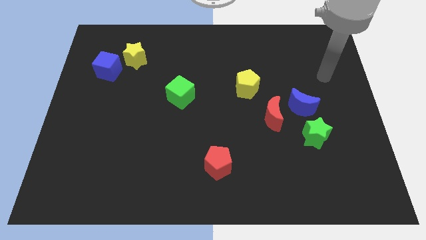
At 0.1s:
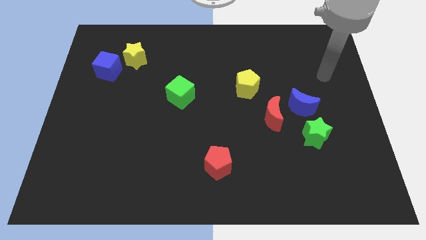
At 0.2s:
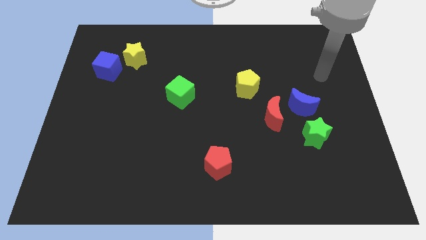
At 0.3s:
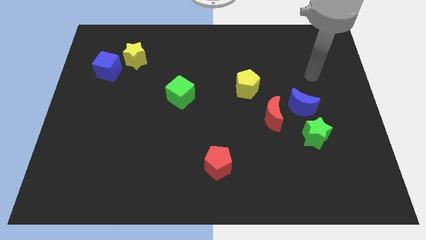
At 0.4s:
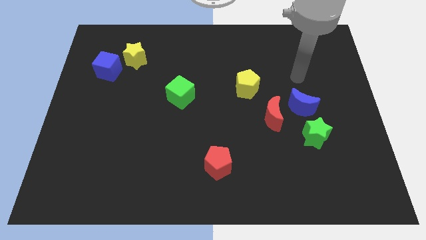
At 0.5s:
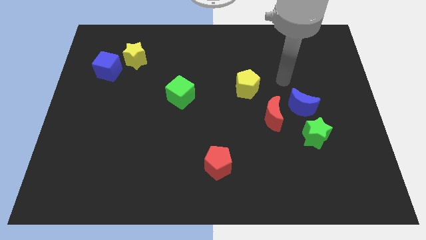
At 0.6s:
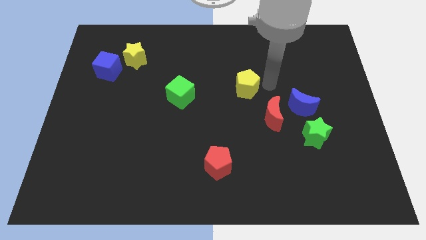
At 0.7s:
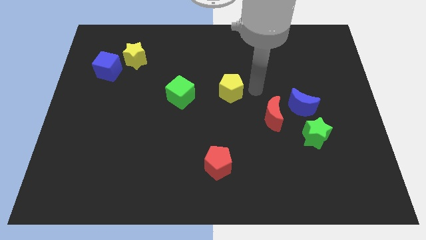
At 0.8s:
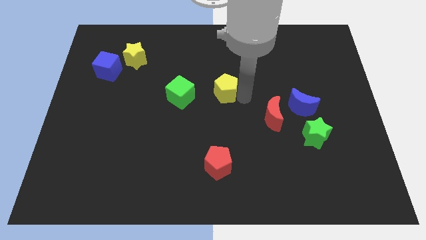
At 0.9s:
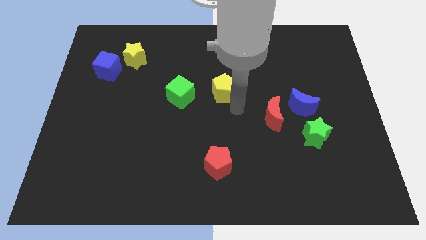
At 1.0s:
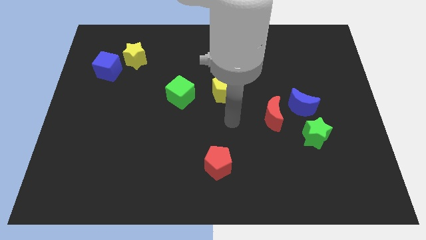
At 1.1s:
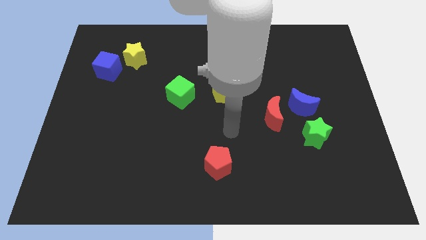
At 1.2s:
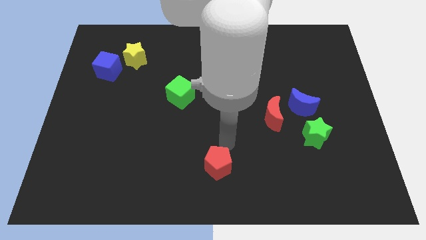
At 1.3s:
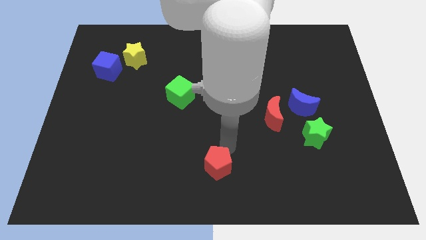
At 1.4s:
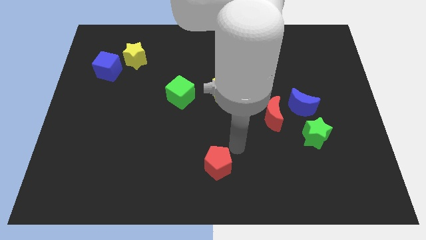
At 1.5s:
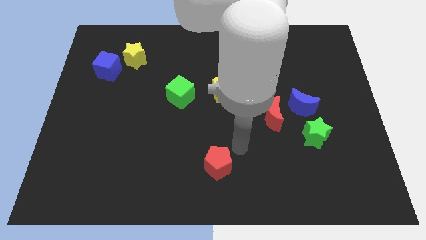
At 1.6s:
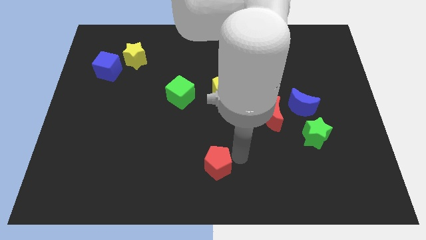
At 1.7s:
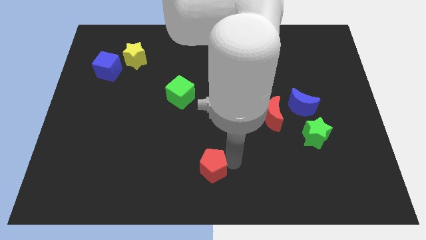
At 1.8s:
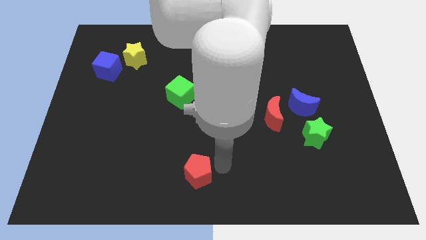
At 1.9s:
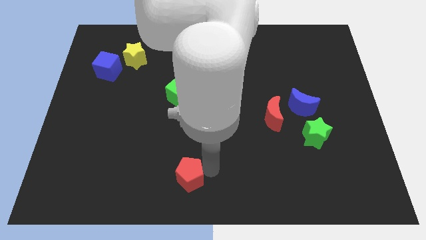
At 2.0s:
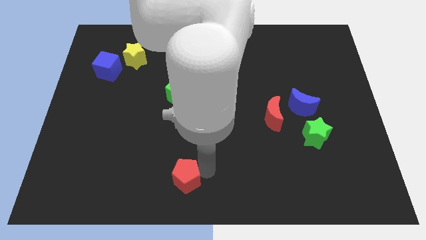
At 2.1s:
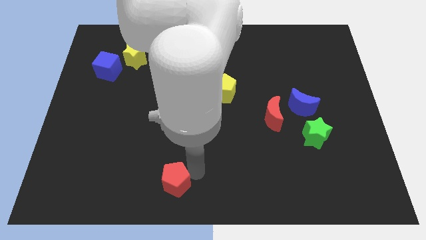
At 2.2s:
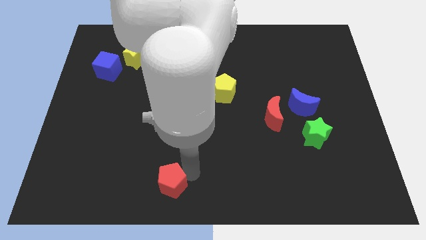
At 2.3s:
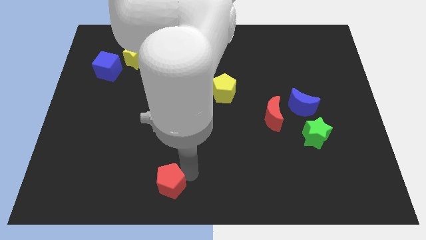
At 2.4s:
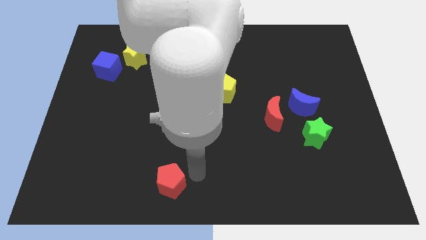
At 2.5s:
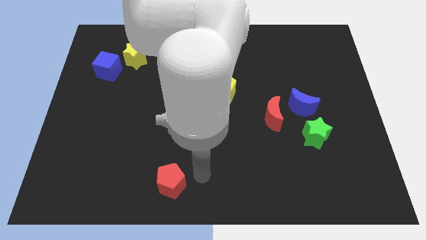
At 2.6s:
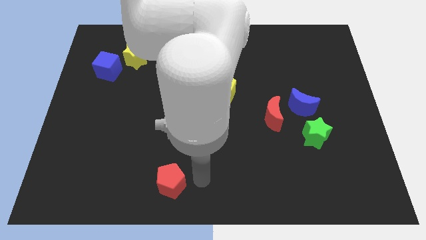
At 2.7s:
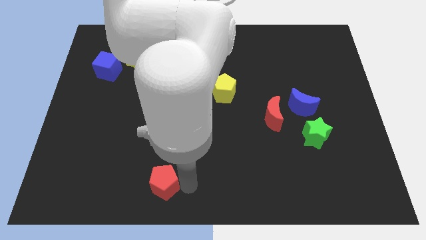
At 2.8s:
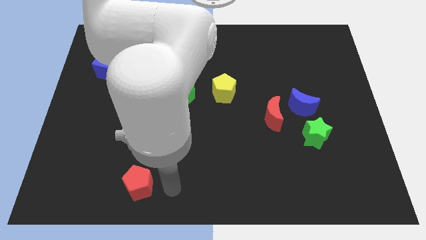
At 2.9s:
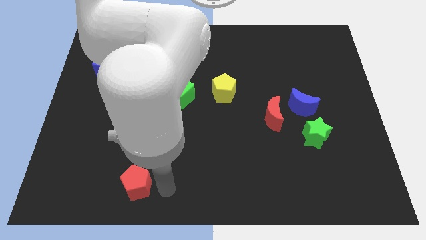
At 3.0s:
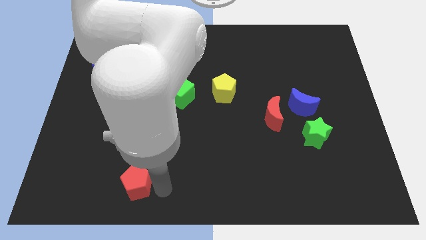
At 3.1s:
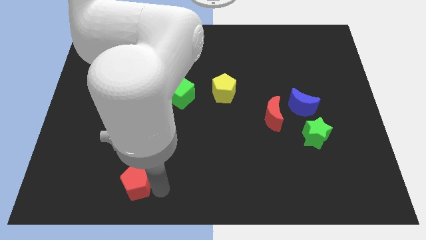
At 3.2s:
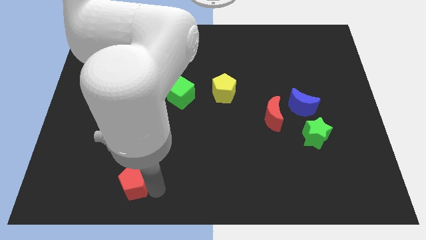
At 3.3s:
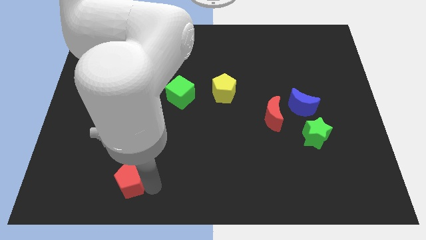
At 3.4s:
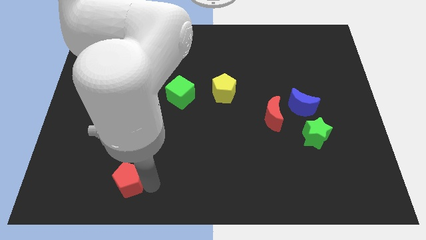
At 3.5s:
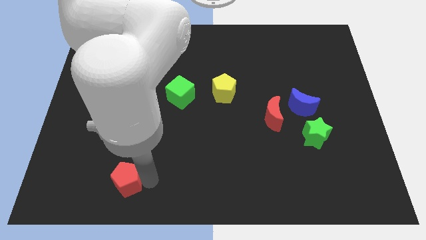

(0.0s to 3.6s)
push the red pentagon to the bottom left of the green cube

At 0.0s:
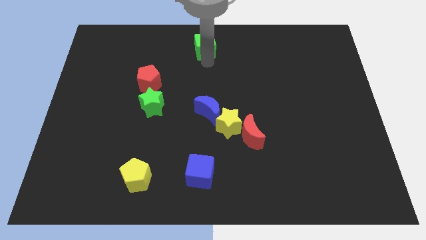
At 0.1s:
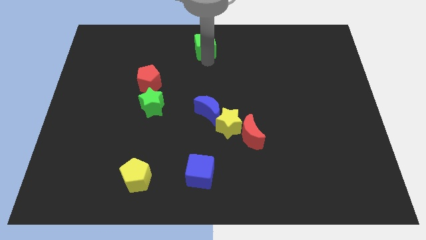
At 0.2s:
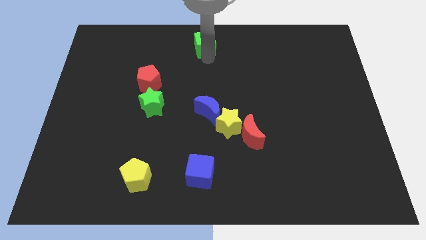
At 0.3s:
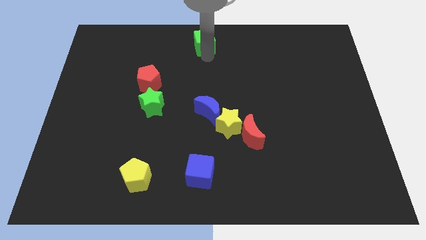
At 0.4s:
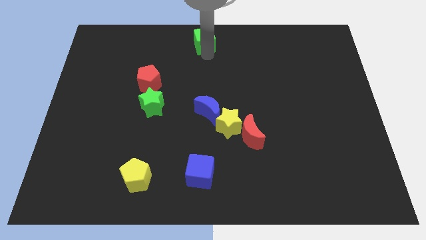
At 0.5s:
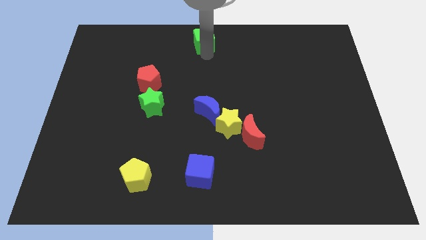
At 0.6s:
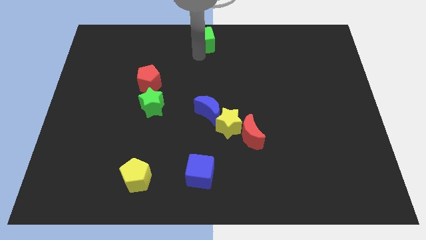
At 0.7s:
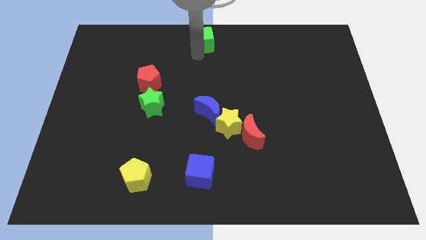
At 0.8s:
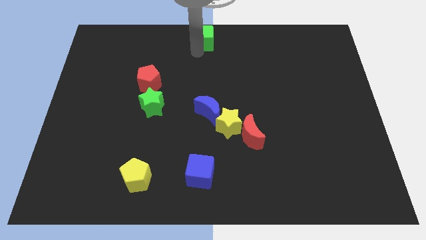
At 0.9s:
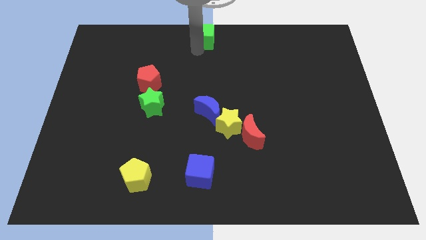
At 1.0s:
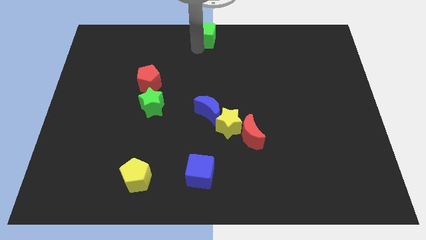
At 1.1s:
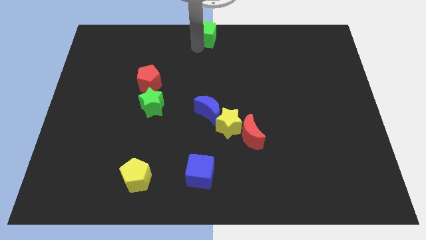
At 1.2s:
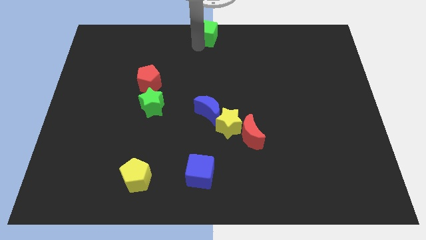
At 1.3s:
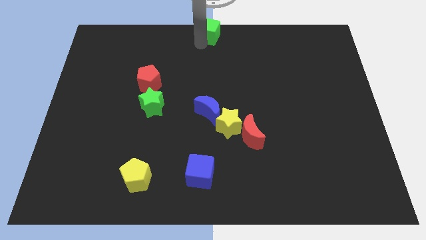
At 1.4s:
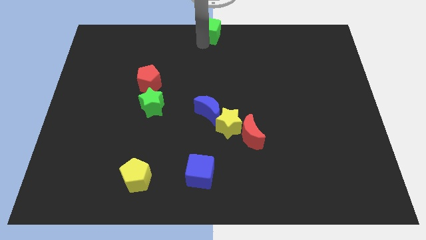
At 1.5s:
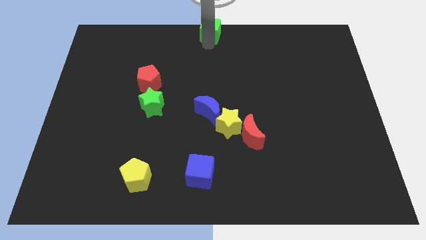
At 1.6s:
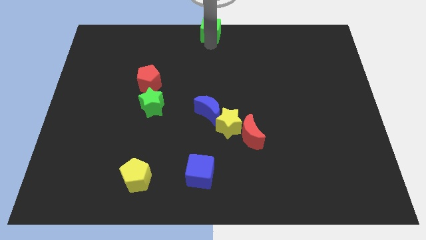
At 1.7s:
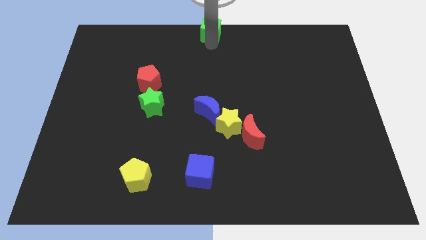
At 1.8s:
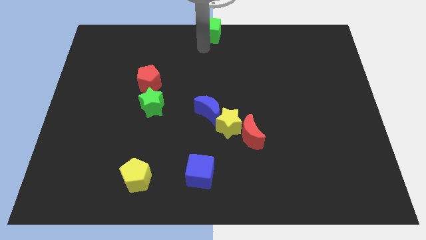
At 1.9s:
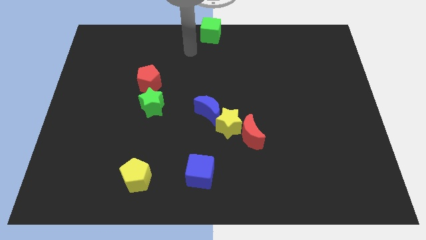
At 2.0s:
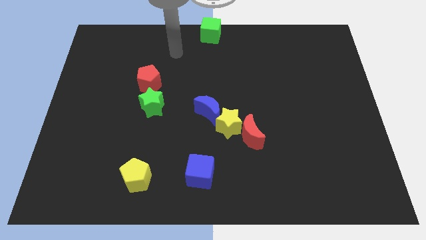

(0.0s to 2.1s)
slide green cube to the top center

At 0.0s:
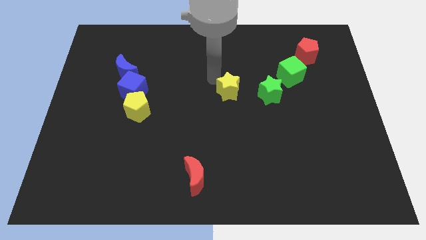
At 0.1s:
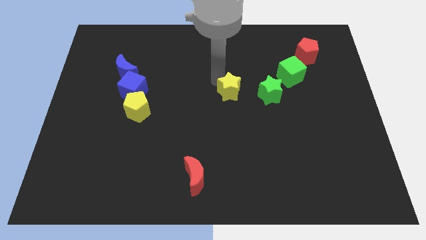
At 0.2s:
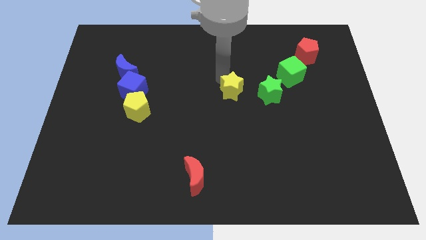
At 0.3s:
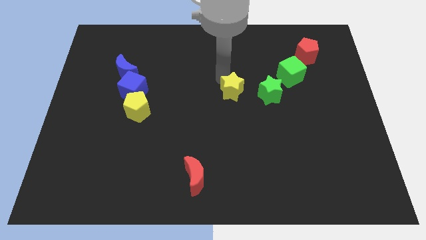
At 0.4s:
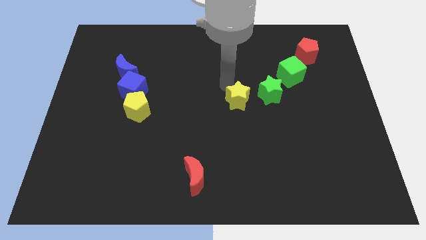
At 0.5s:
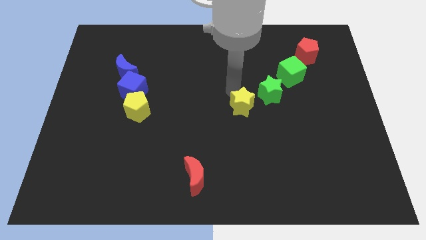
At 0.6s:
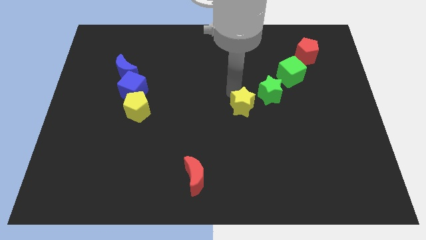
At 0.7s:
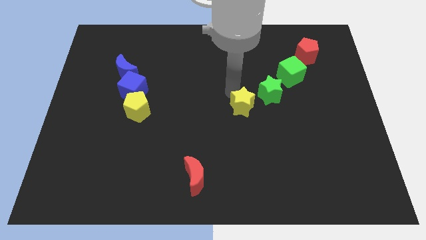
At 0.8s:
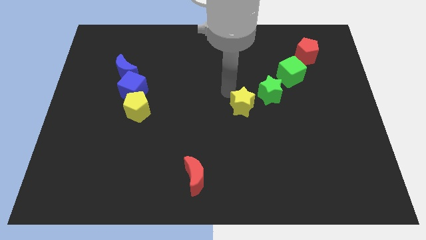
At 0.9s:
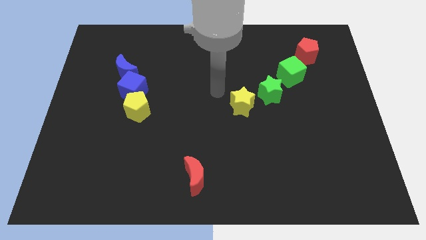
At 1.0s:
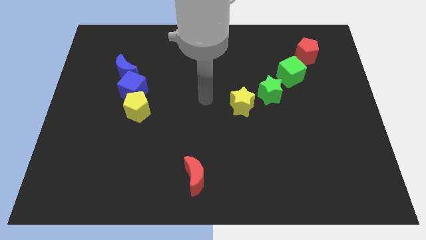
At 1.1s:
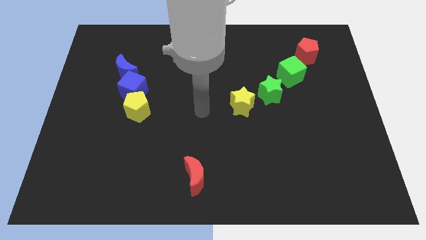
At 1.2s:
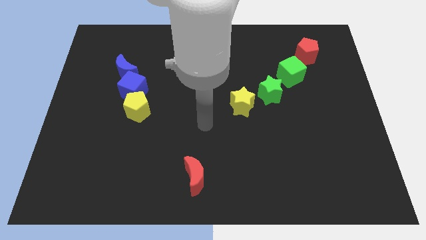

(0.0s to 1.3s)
place the yellow star beside the green star

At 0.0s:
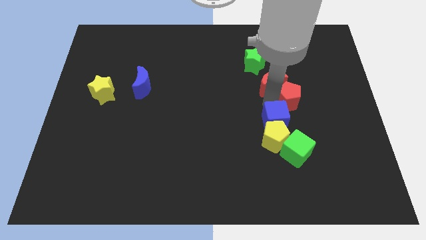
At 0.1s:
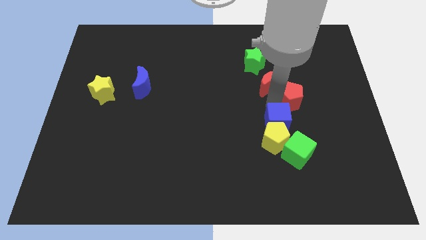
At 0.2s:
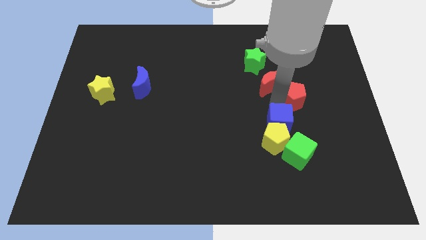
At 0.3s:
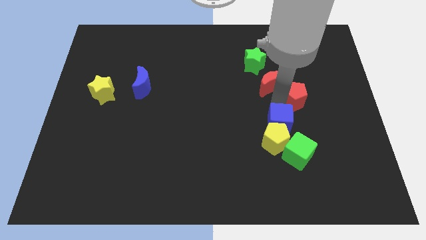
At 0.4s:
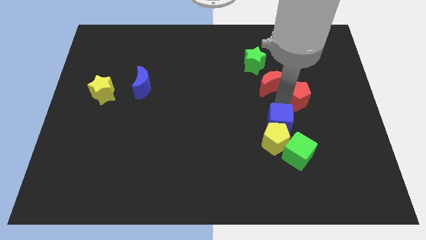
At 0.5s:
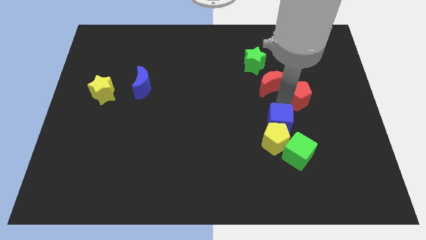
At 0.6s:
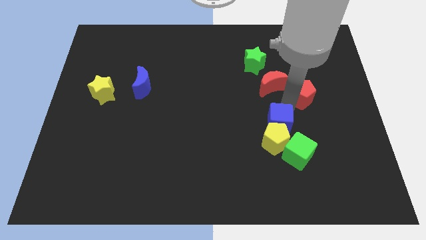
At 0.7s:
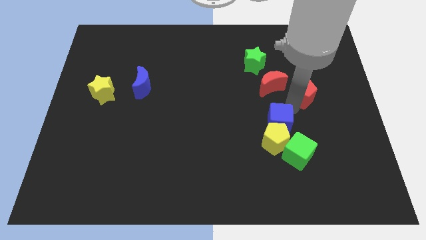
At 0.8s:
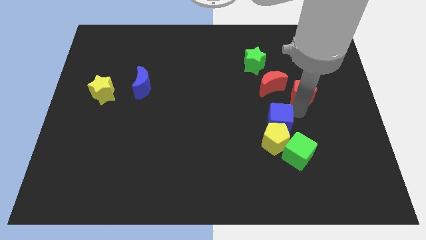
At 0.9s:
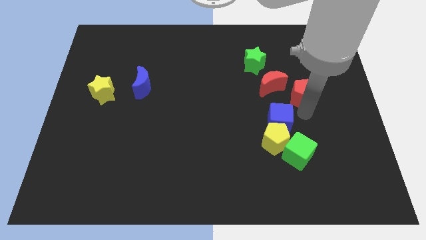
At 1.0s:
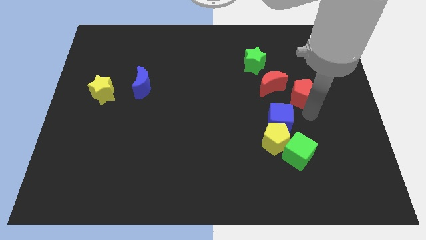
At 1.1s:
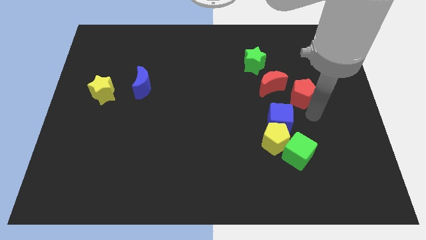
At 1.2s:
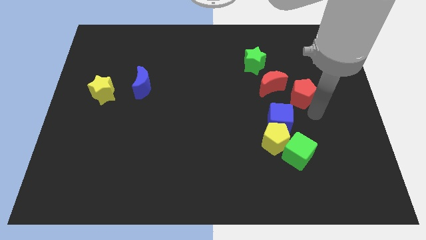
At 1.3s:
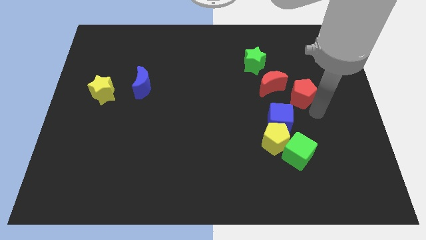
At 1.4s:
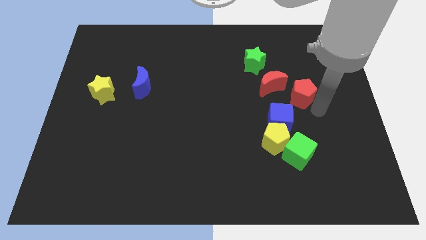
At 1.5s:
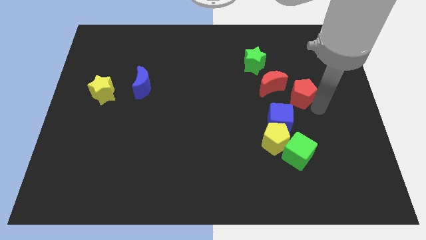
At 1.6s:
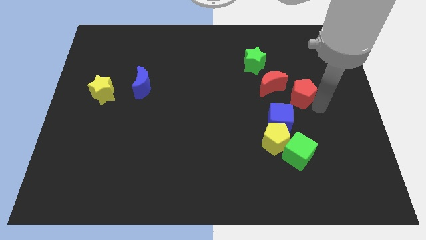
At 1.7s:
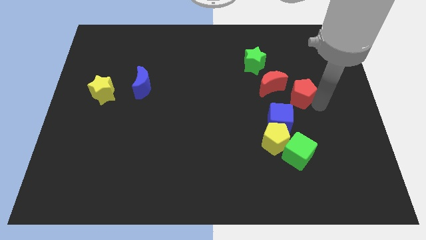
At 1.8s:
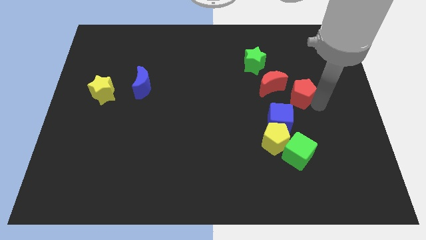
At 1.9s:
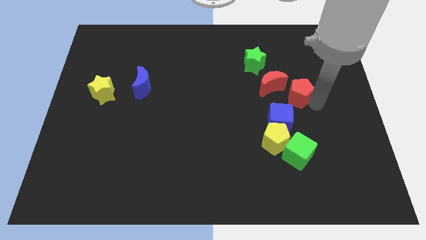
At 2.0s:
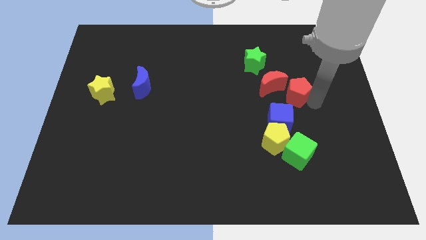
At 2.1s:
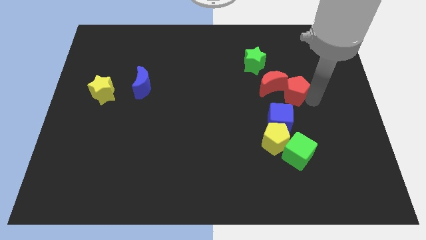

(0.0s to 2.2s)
separate the blue cube from the red pentagon
